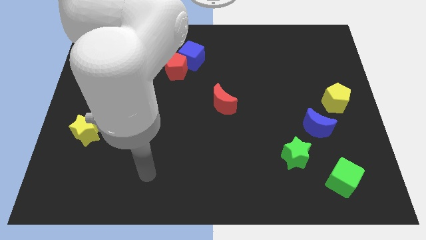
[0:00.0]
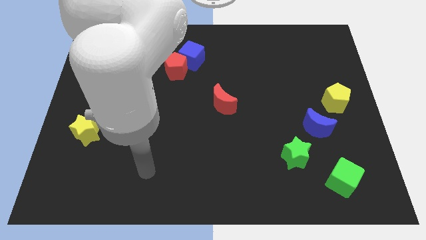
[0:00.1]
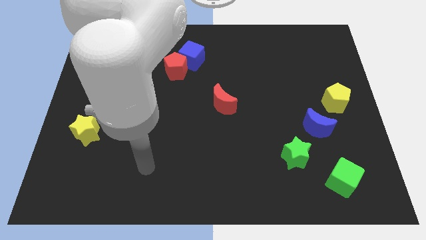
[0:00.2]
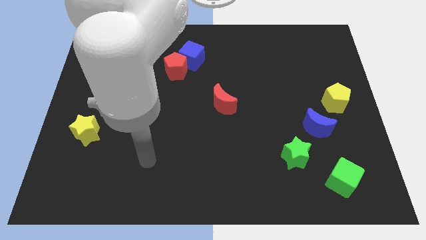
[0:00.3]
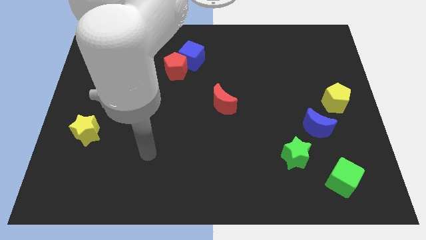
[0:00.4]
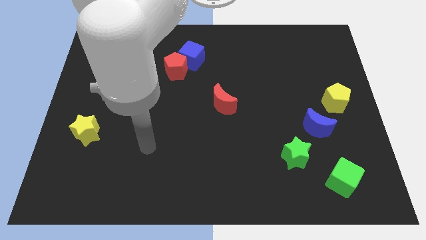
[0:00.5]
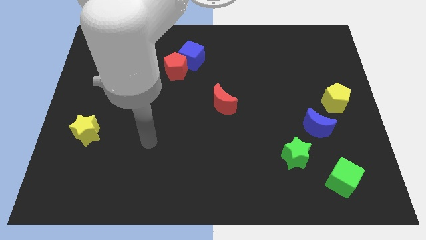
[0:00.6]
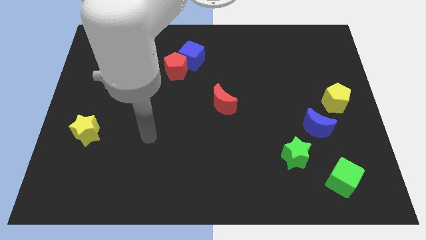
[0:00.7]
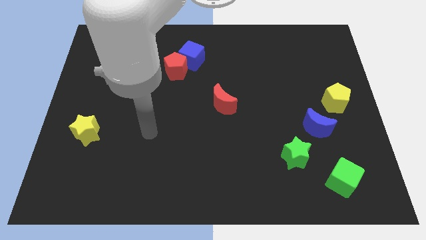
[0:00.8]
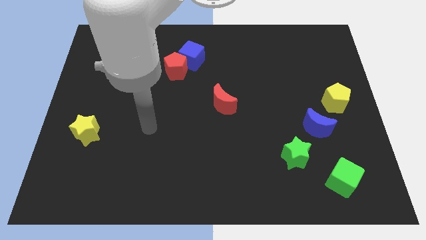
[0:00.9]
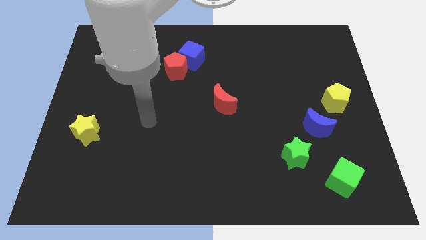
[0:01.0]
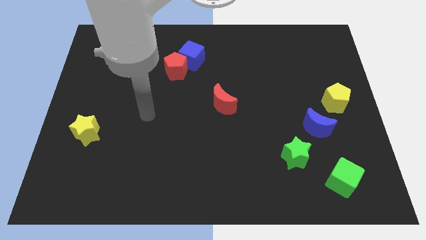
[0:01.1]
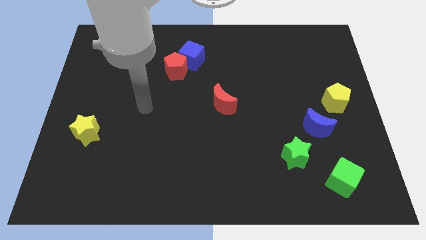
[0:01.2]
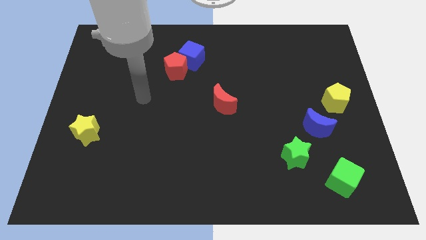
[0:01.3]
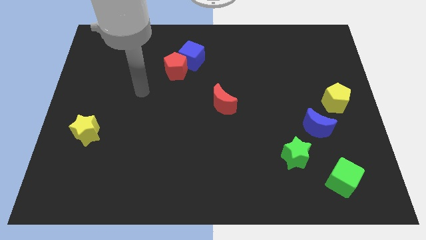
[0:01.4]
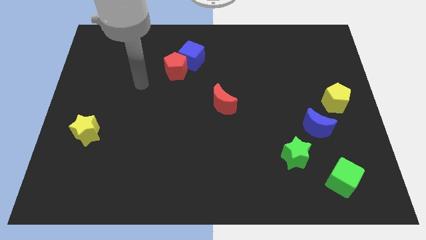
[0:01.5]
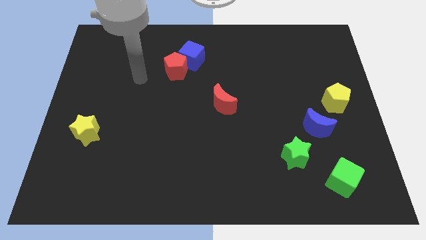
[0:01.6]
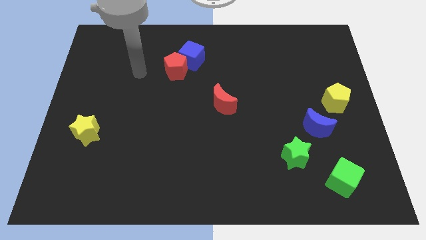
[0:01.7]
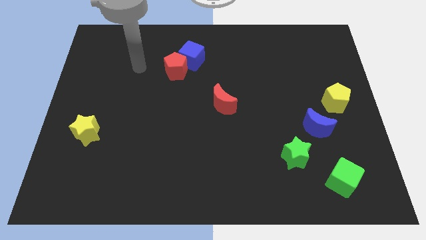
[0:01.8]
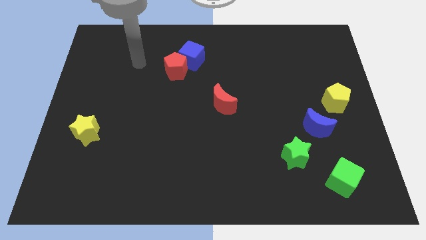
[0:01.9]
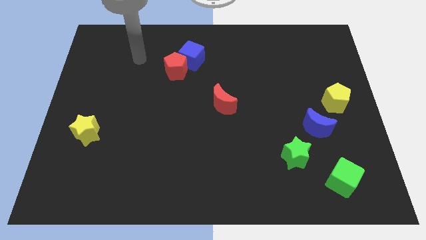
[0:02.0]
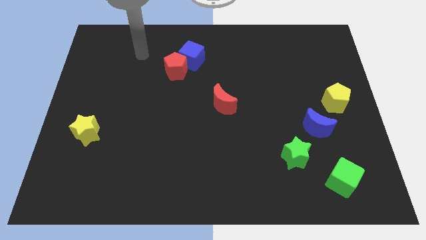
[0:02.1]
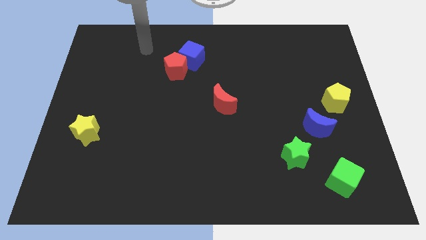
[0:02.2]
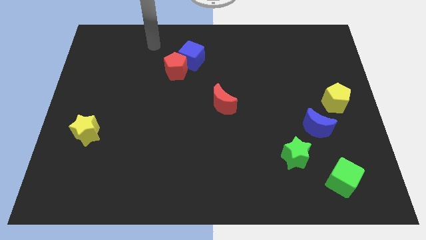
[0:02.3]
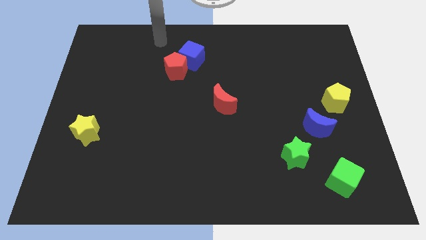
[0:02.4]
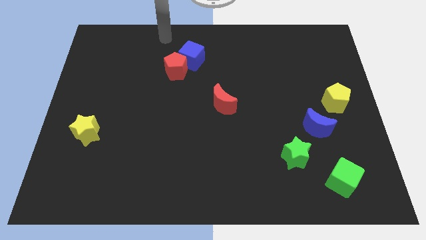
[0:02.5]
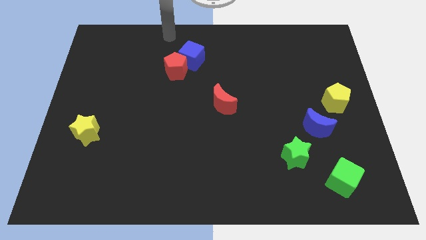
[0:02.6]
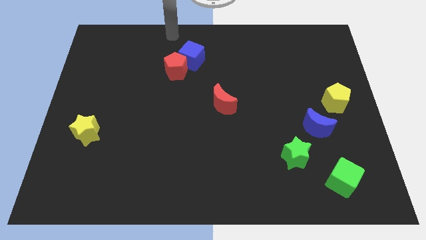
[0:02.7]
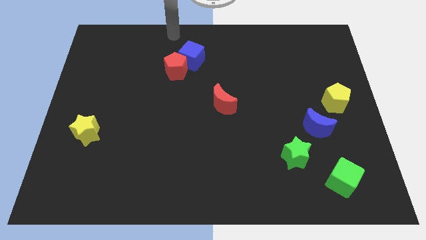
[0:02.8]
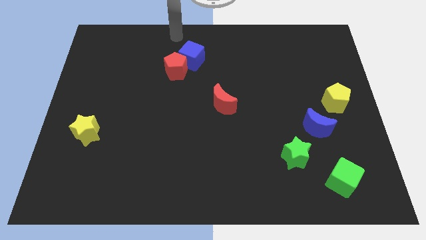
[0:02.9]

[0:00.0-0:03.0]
point the arm above the blue cube

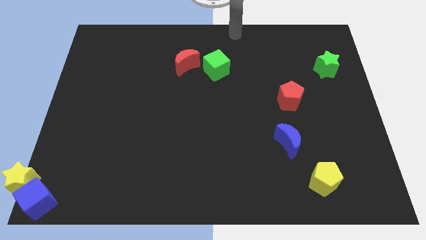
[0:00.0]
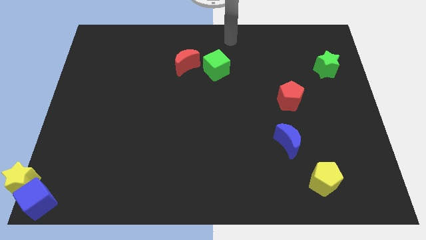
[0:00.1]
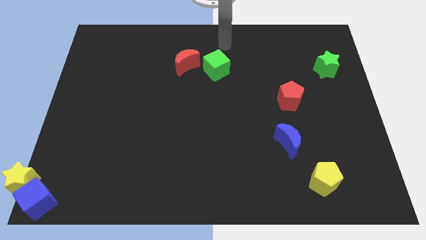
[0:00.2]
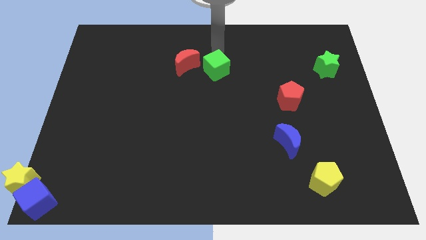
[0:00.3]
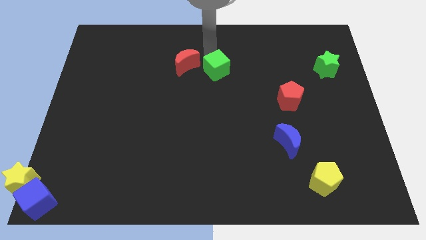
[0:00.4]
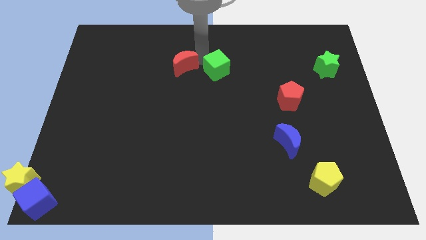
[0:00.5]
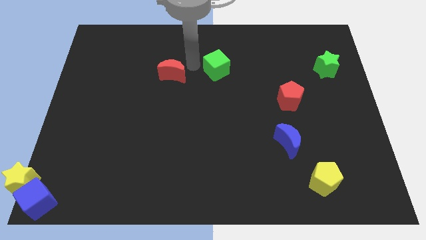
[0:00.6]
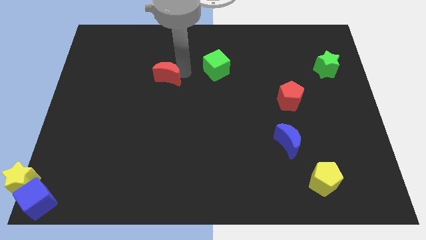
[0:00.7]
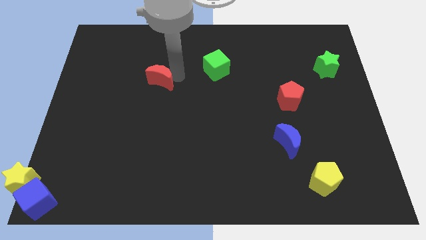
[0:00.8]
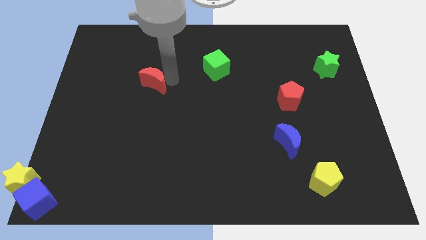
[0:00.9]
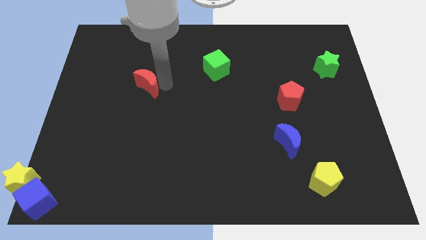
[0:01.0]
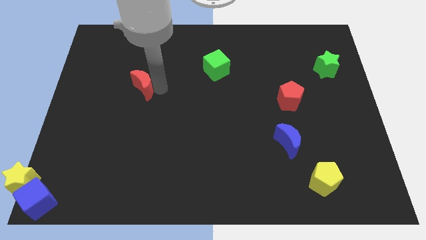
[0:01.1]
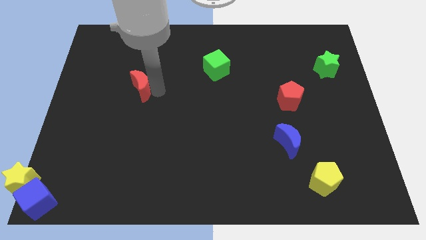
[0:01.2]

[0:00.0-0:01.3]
separate the red moon and the green cube

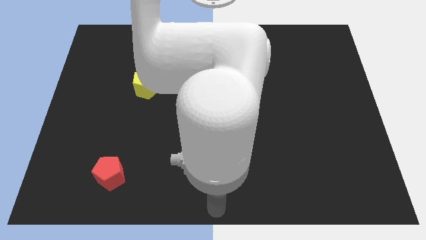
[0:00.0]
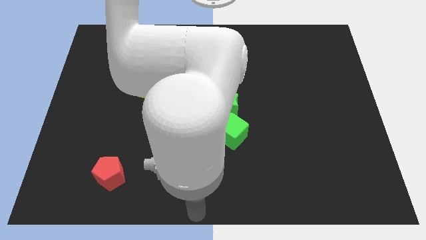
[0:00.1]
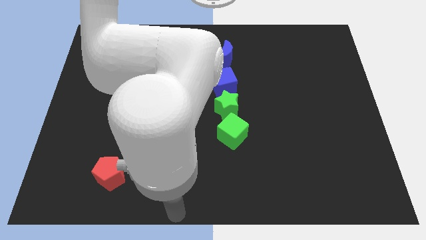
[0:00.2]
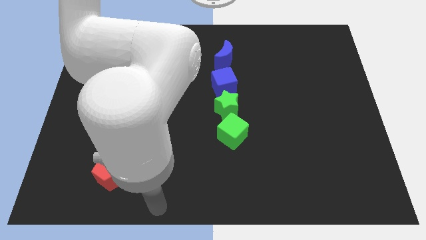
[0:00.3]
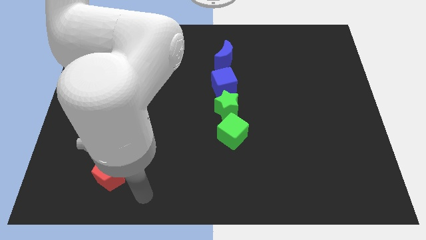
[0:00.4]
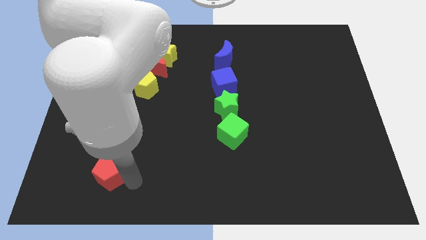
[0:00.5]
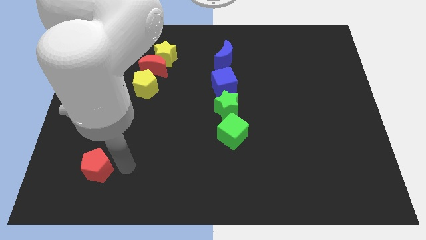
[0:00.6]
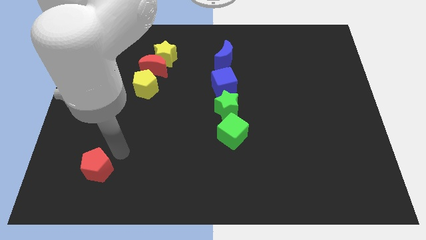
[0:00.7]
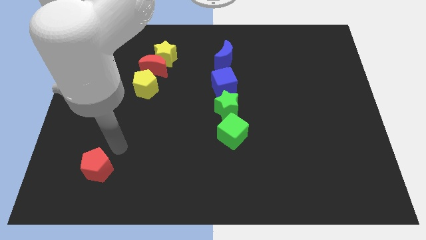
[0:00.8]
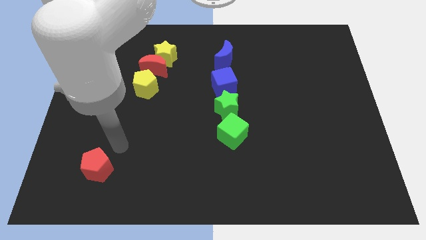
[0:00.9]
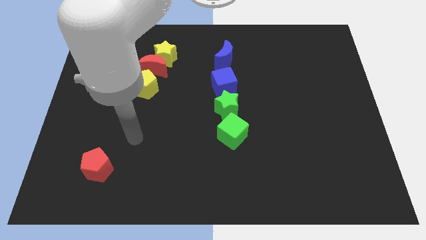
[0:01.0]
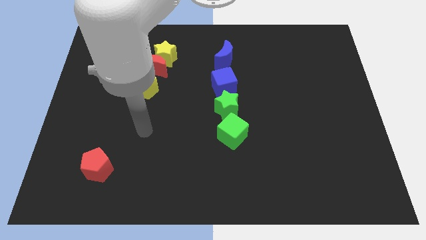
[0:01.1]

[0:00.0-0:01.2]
move the red pentagon slightly to the left side of the board

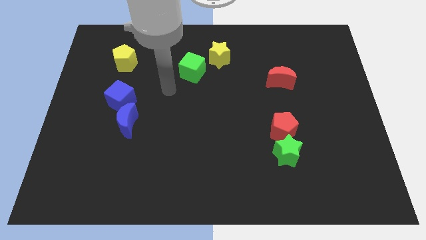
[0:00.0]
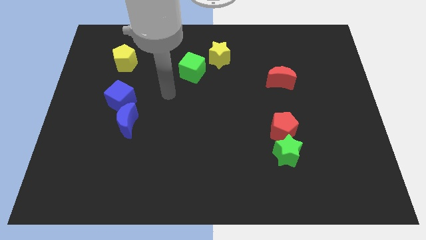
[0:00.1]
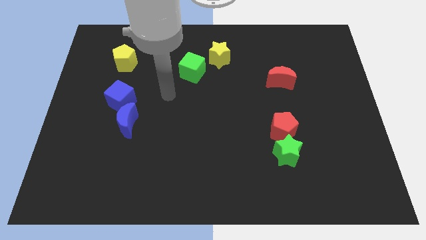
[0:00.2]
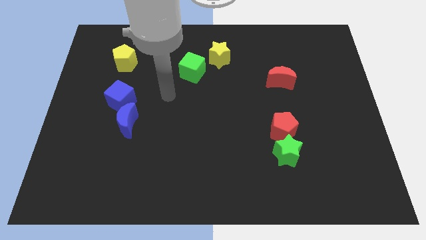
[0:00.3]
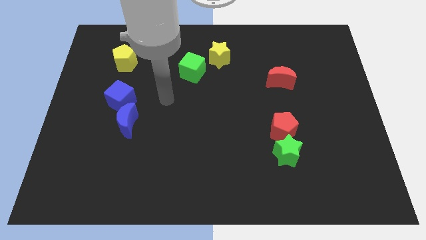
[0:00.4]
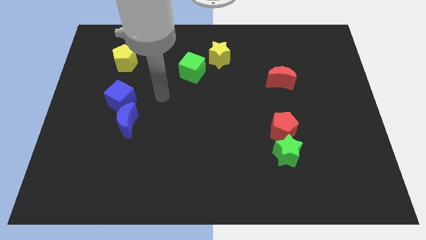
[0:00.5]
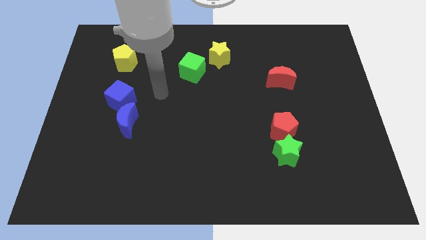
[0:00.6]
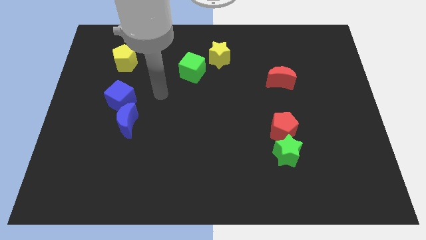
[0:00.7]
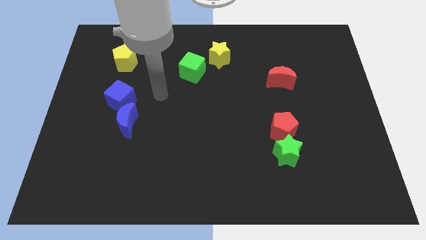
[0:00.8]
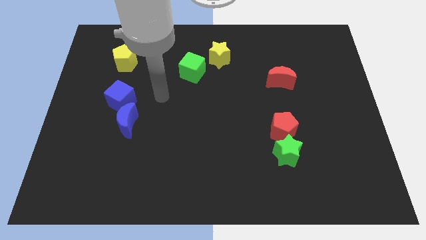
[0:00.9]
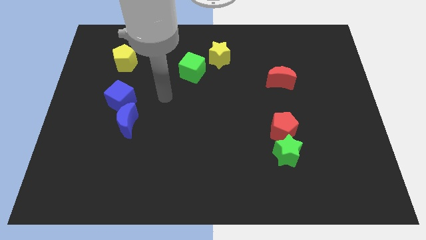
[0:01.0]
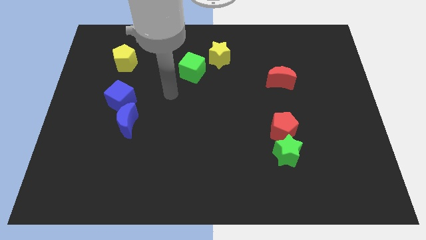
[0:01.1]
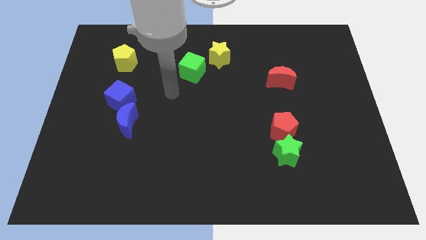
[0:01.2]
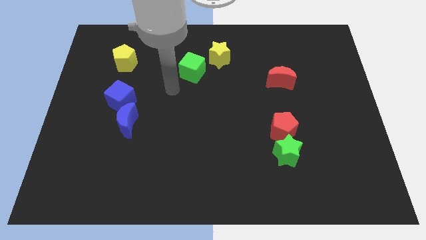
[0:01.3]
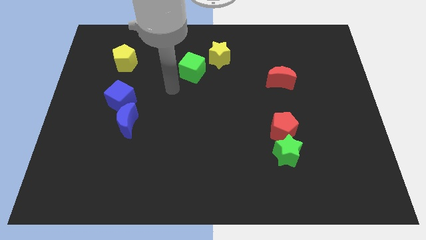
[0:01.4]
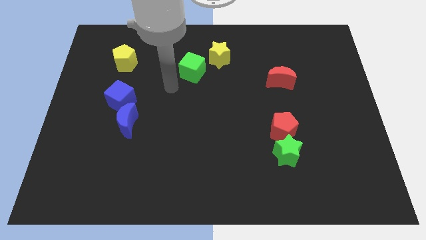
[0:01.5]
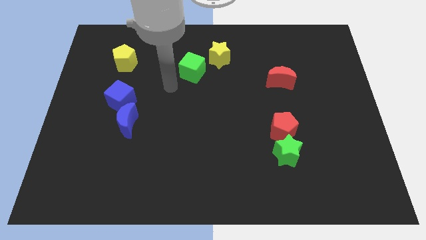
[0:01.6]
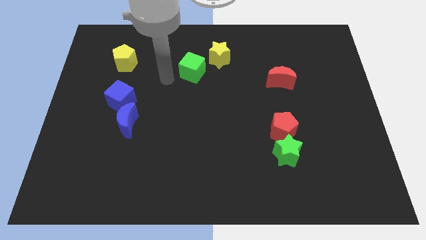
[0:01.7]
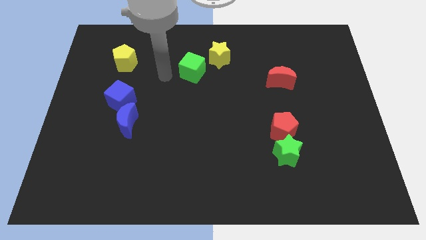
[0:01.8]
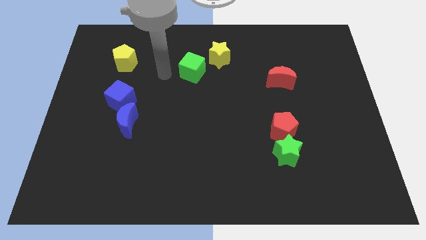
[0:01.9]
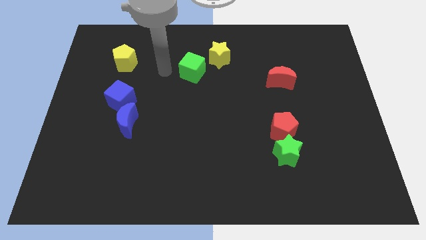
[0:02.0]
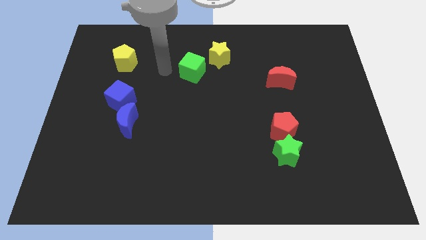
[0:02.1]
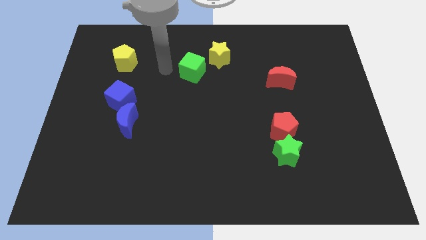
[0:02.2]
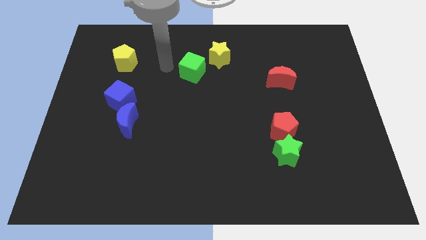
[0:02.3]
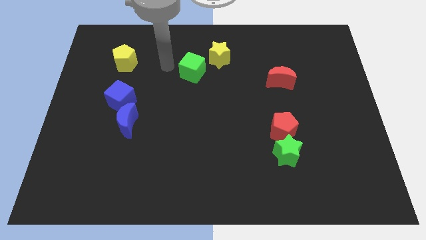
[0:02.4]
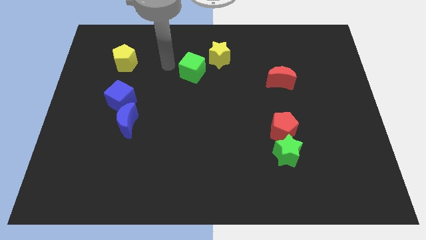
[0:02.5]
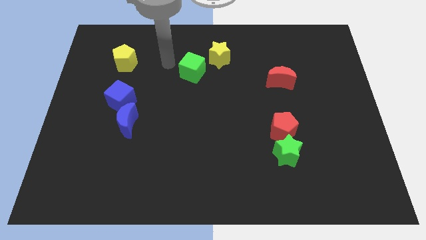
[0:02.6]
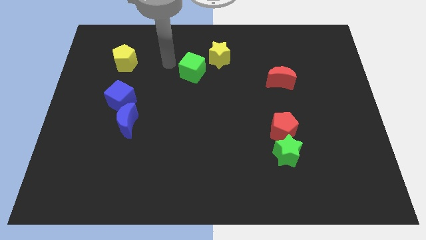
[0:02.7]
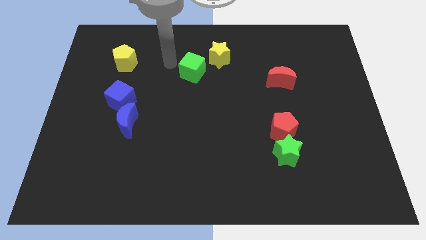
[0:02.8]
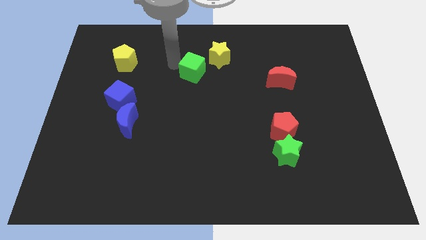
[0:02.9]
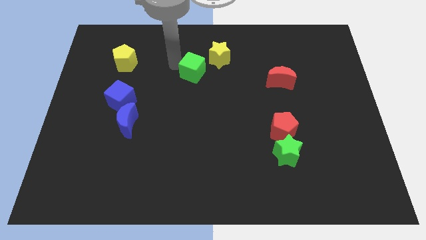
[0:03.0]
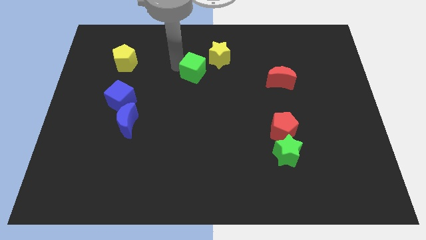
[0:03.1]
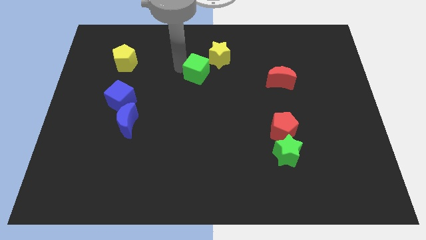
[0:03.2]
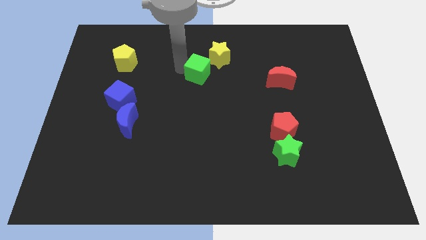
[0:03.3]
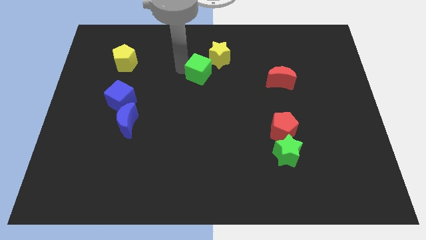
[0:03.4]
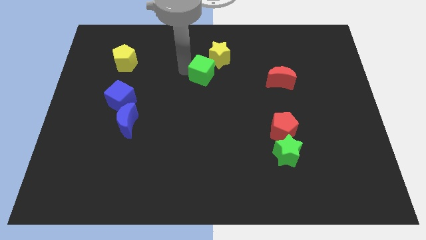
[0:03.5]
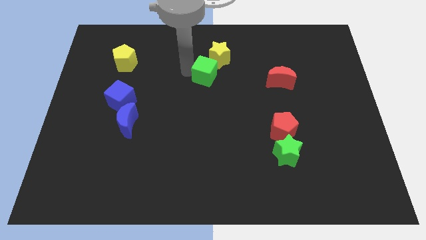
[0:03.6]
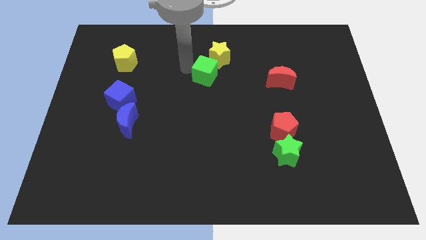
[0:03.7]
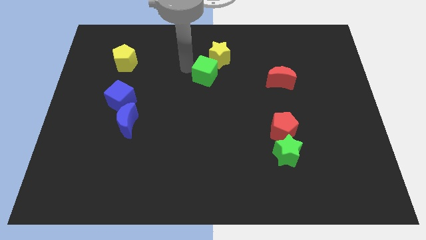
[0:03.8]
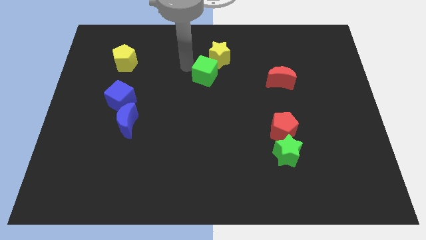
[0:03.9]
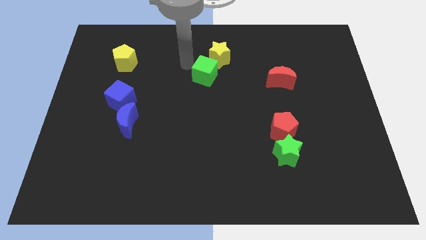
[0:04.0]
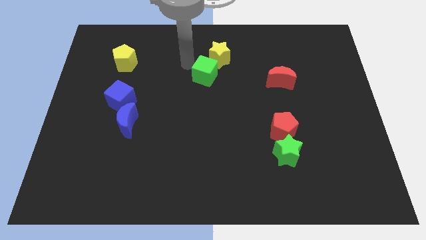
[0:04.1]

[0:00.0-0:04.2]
place the green cube left diagonally towards yellow star
